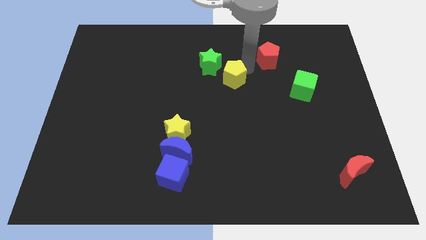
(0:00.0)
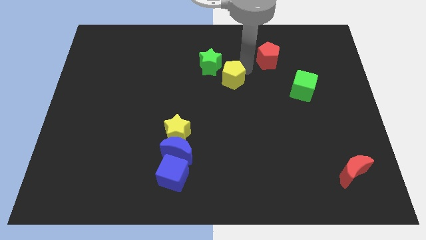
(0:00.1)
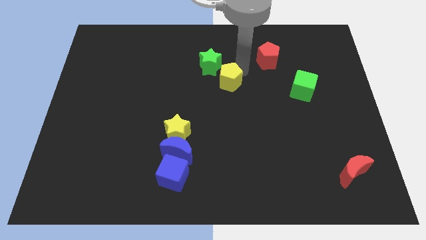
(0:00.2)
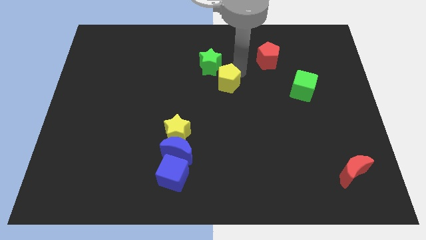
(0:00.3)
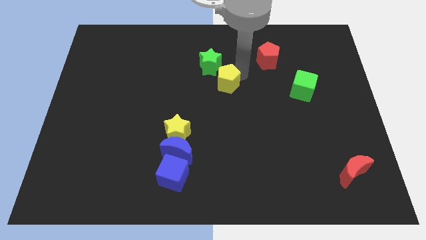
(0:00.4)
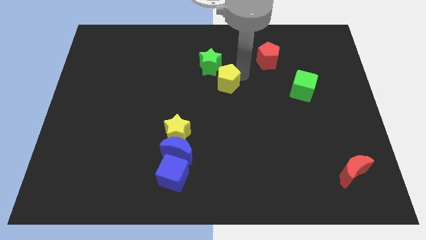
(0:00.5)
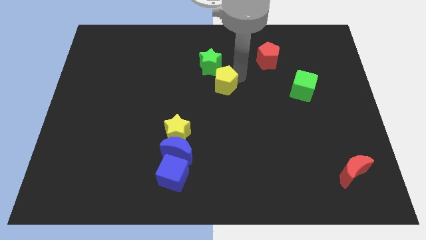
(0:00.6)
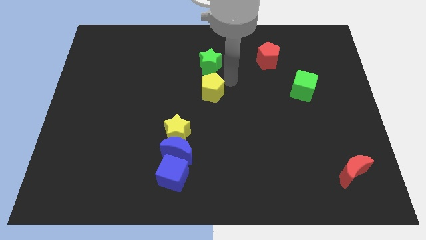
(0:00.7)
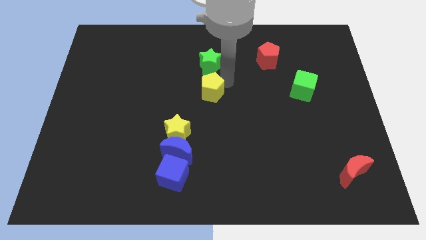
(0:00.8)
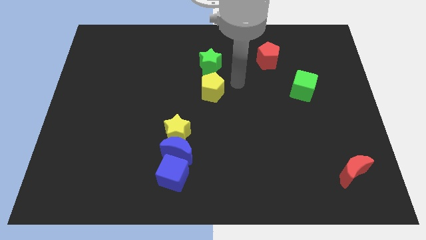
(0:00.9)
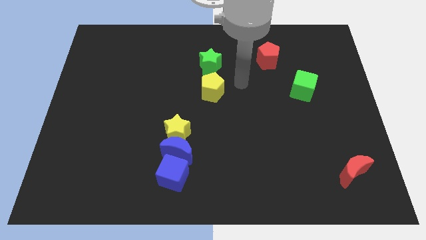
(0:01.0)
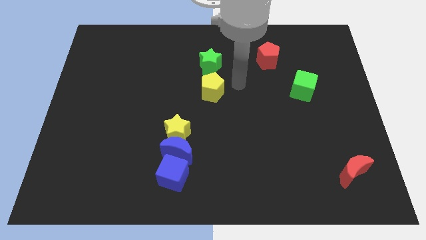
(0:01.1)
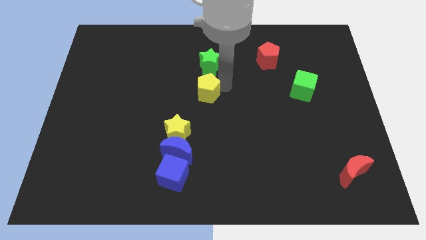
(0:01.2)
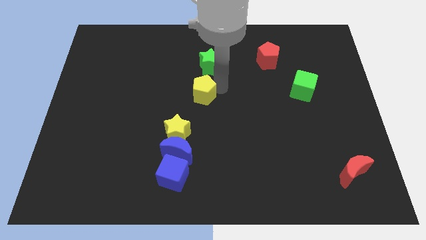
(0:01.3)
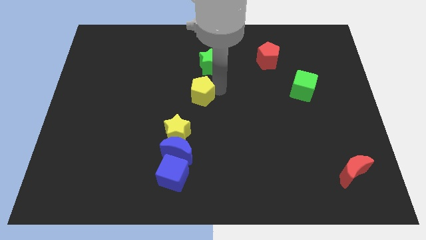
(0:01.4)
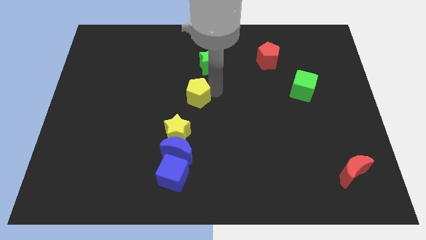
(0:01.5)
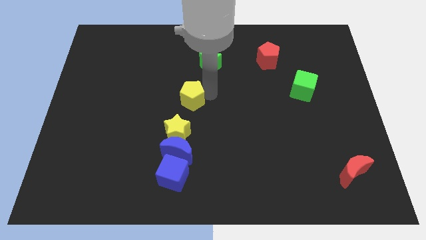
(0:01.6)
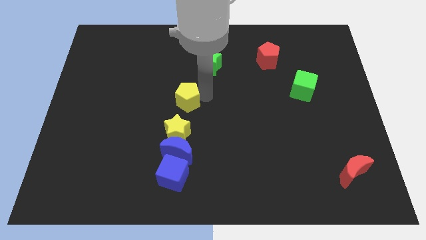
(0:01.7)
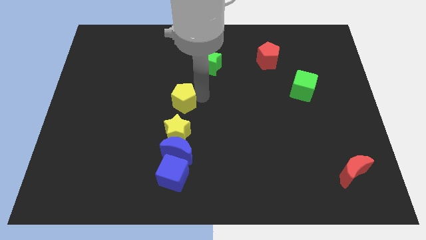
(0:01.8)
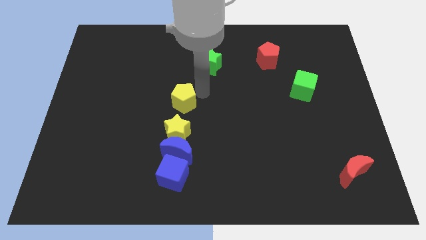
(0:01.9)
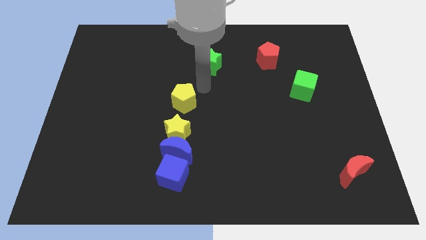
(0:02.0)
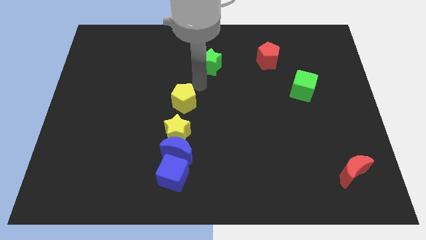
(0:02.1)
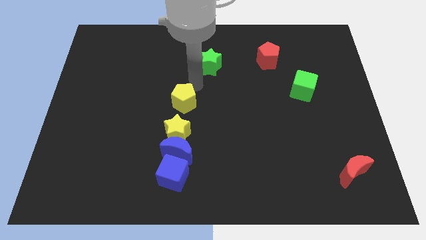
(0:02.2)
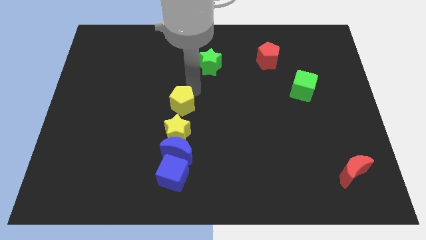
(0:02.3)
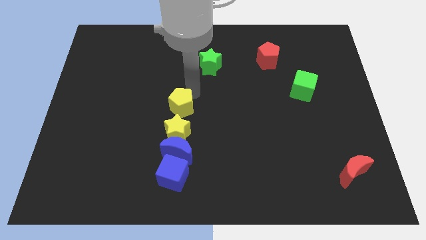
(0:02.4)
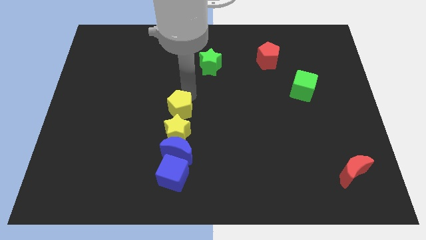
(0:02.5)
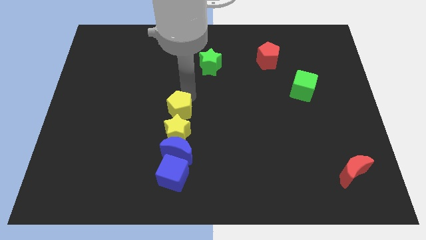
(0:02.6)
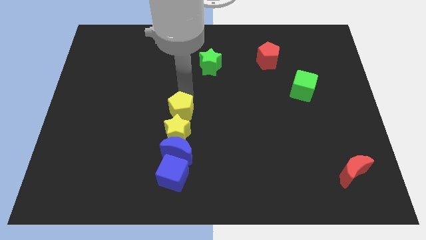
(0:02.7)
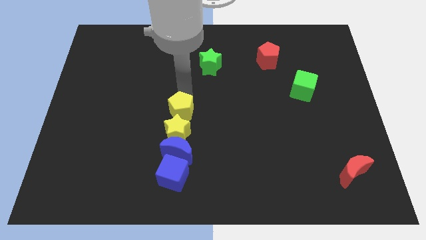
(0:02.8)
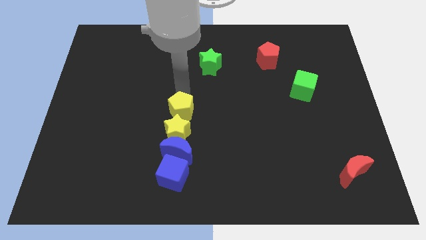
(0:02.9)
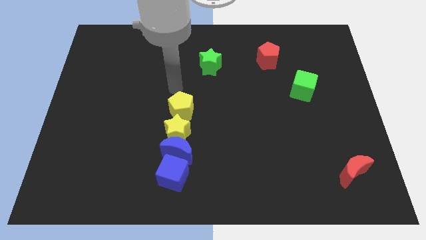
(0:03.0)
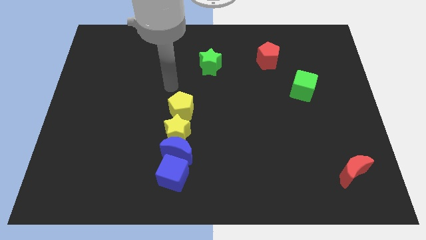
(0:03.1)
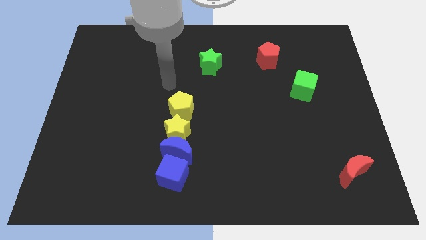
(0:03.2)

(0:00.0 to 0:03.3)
push the yellow pentagon to the top of the yellow star

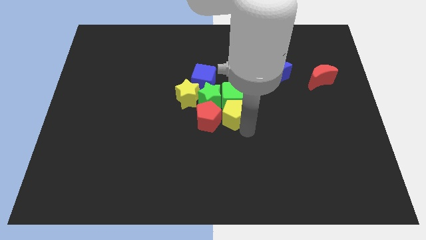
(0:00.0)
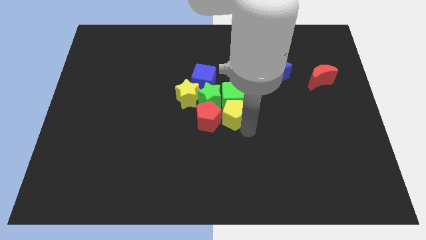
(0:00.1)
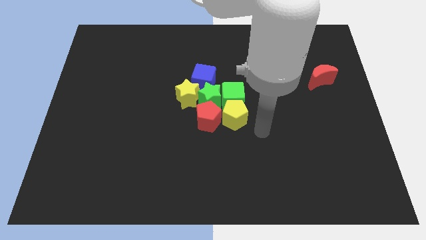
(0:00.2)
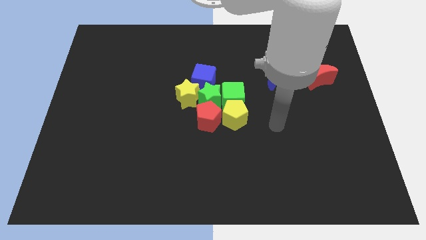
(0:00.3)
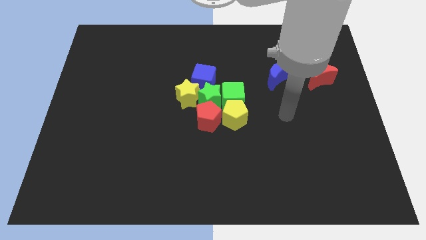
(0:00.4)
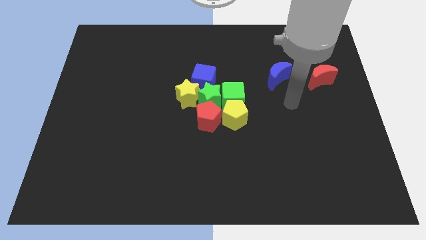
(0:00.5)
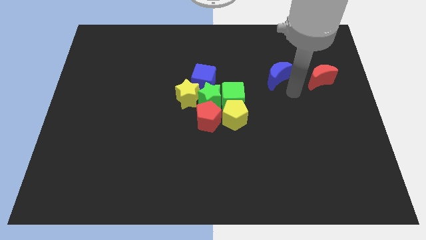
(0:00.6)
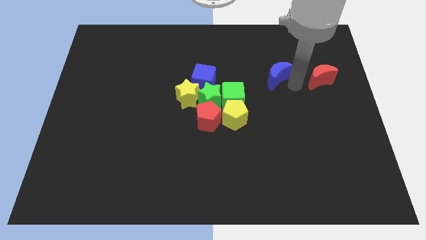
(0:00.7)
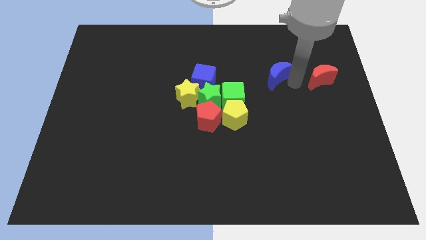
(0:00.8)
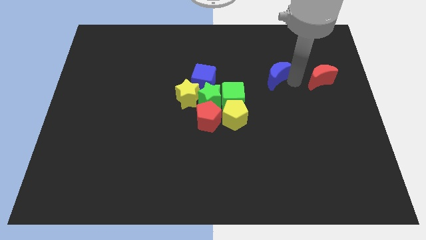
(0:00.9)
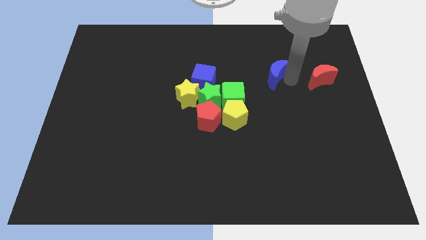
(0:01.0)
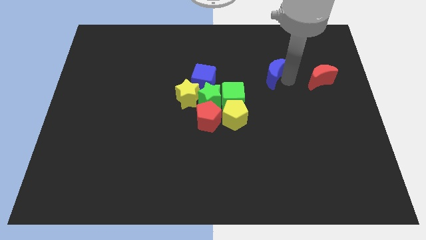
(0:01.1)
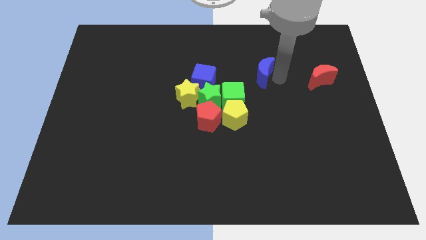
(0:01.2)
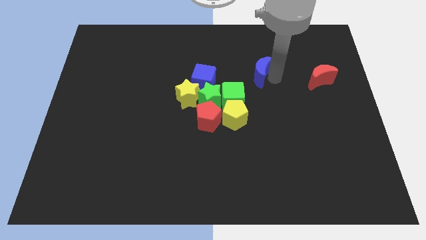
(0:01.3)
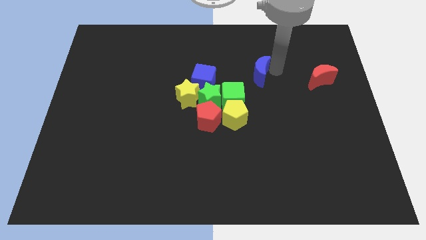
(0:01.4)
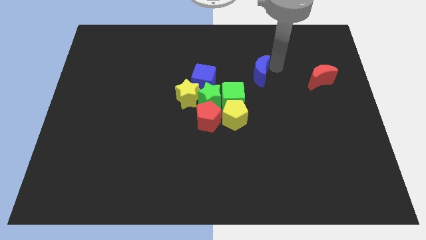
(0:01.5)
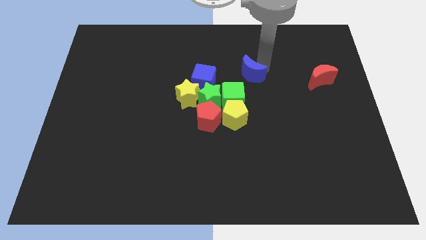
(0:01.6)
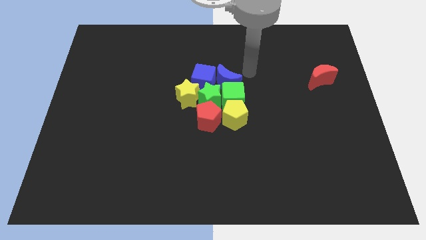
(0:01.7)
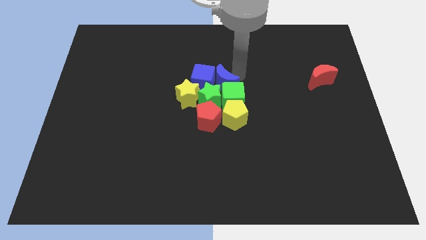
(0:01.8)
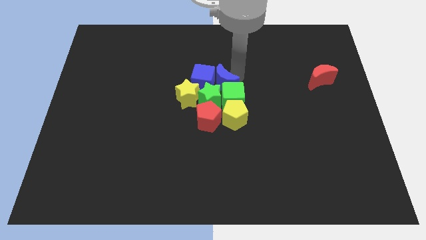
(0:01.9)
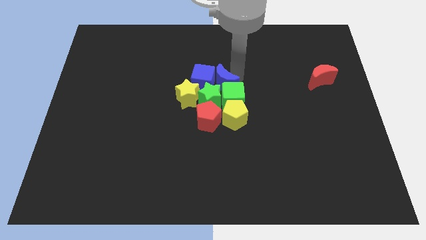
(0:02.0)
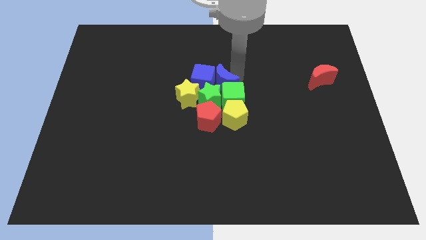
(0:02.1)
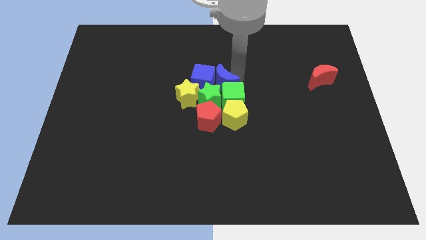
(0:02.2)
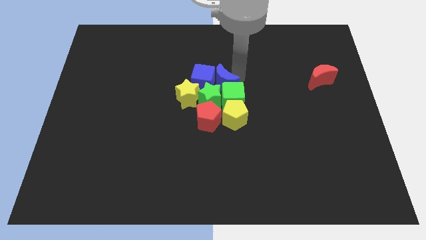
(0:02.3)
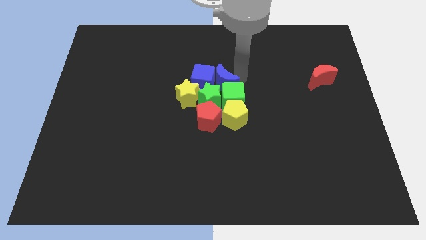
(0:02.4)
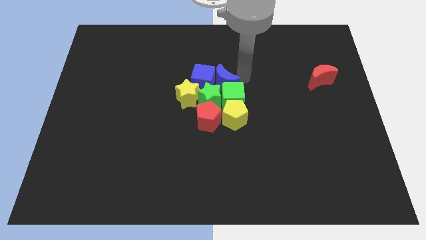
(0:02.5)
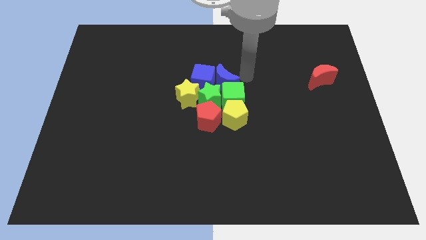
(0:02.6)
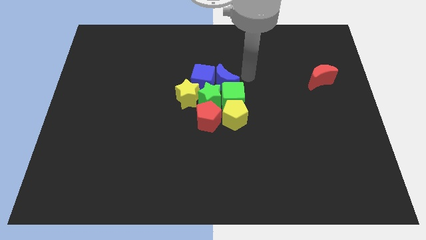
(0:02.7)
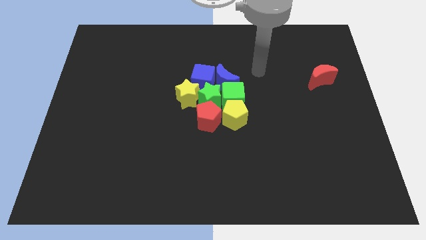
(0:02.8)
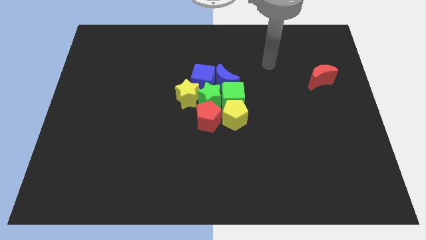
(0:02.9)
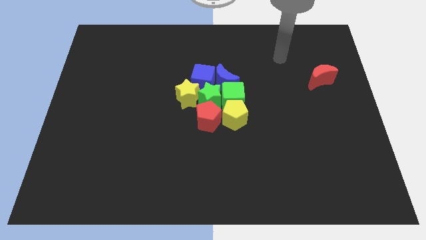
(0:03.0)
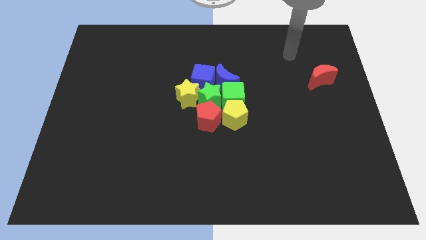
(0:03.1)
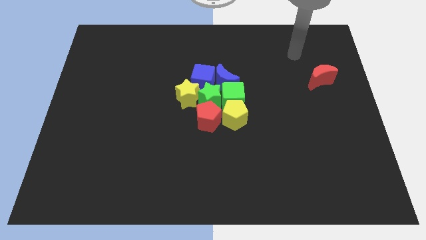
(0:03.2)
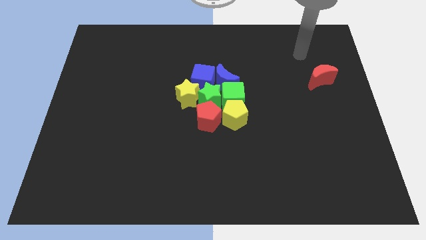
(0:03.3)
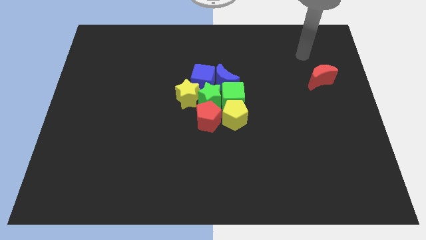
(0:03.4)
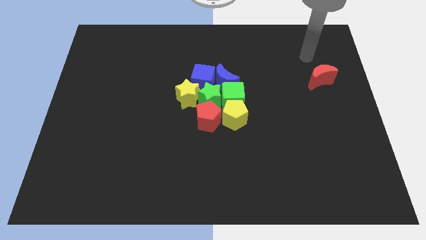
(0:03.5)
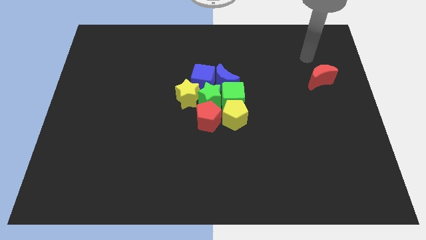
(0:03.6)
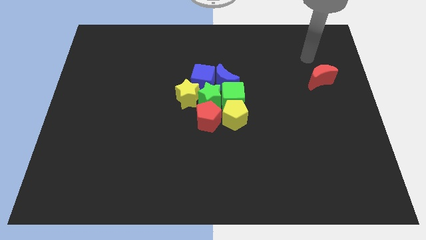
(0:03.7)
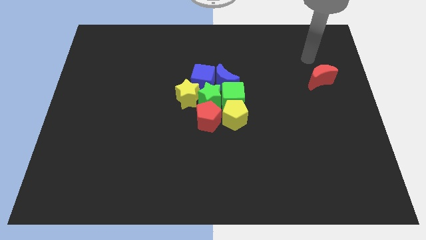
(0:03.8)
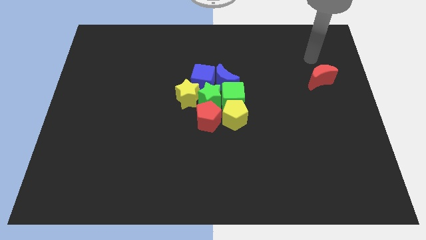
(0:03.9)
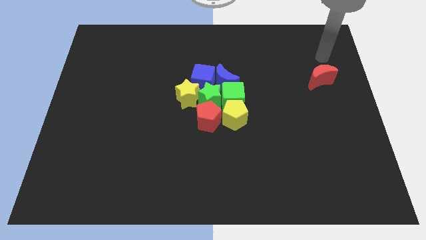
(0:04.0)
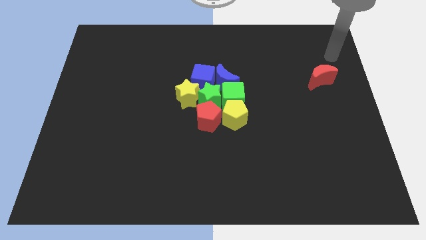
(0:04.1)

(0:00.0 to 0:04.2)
push the blue crescent into the blue cube

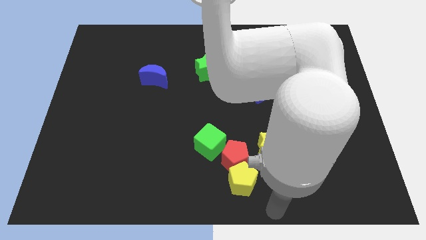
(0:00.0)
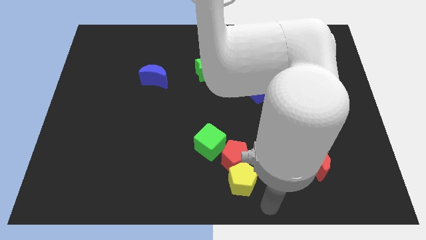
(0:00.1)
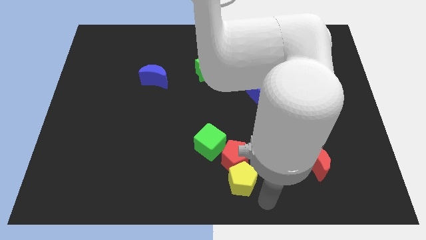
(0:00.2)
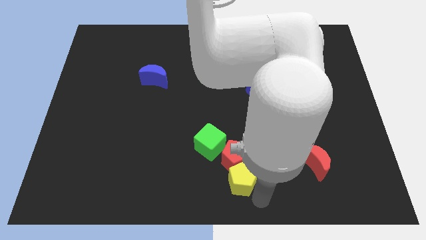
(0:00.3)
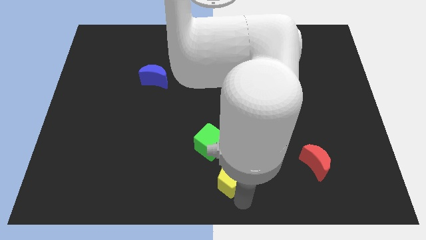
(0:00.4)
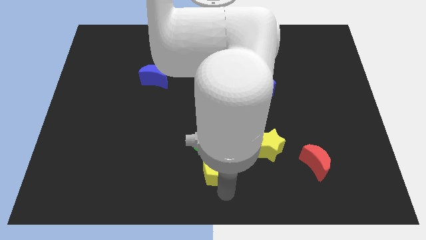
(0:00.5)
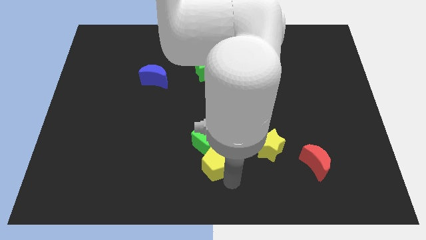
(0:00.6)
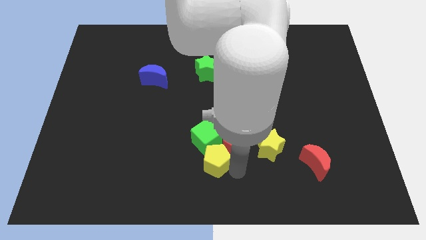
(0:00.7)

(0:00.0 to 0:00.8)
push the yellow pentagon into a group of blocks

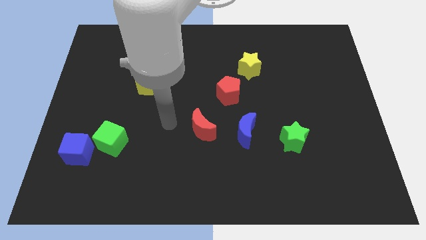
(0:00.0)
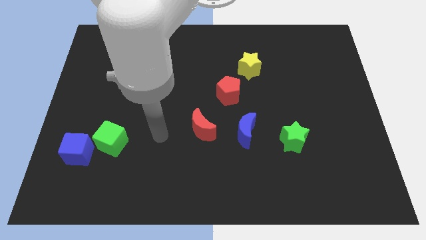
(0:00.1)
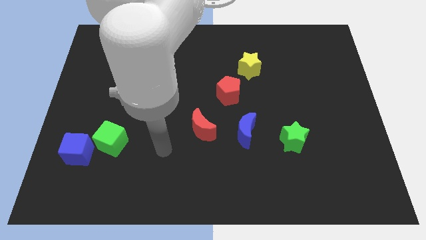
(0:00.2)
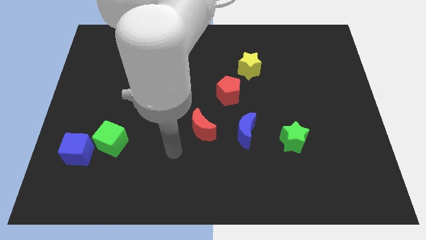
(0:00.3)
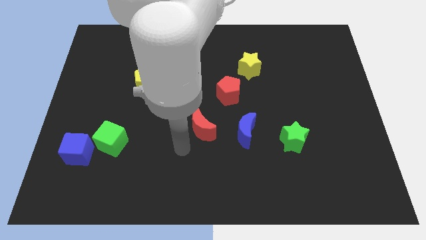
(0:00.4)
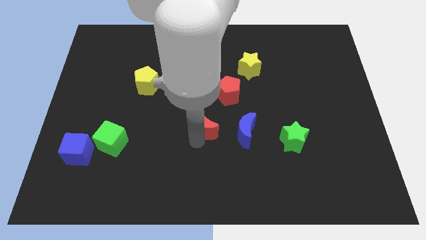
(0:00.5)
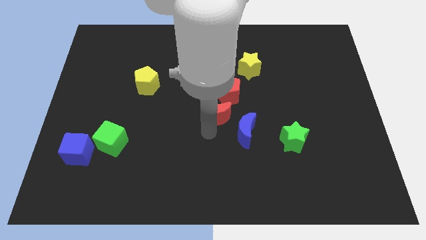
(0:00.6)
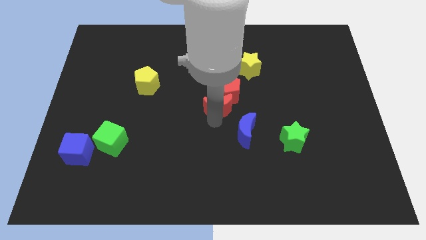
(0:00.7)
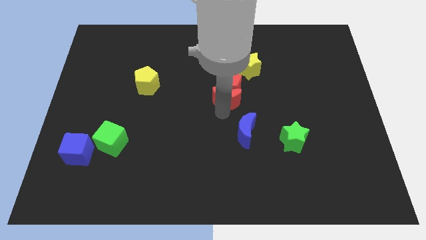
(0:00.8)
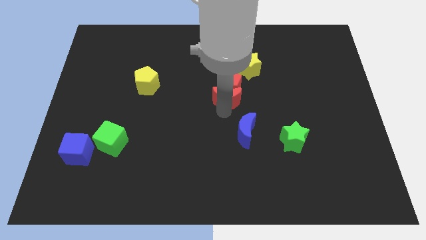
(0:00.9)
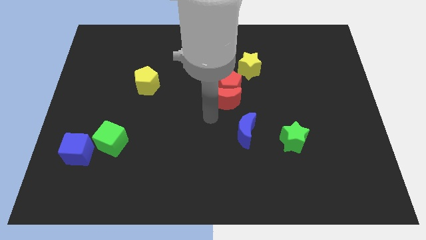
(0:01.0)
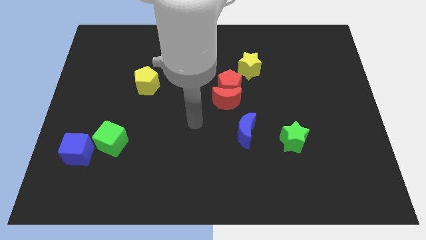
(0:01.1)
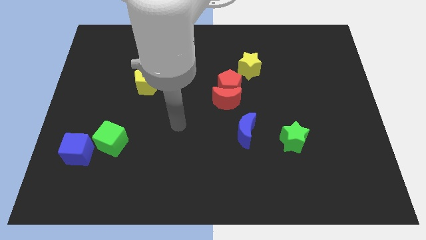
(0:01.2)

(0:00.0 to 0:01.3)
push the red moon into the red pentagon
